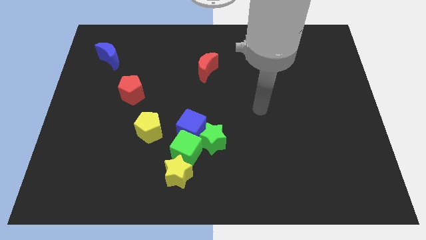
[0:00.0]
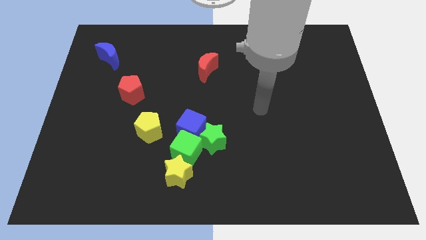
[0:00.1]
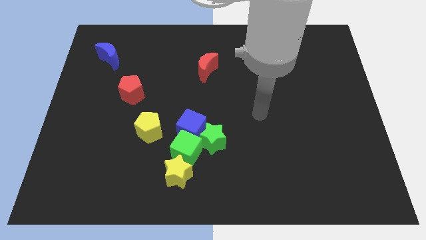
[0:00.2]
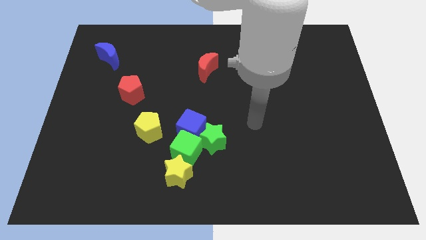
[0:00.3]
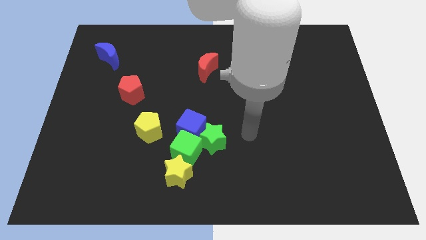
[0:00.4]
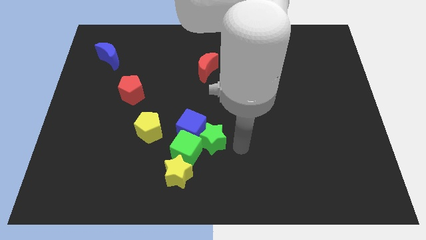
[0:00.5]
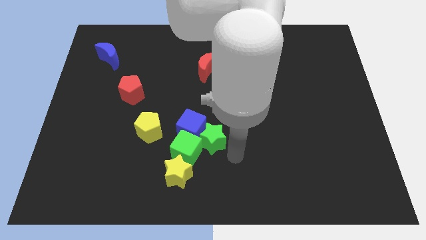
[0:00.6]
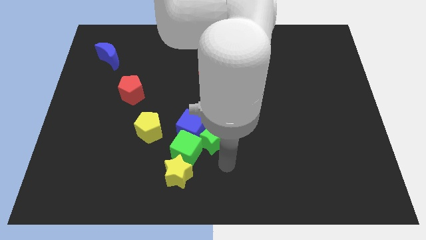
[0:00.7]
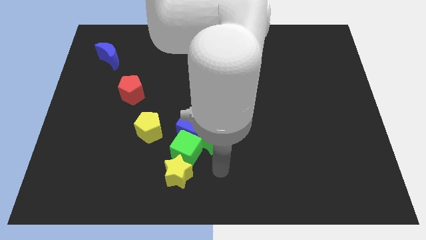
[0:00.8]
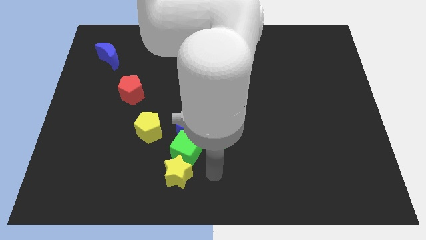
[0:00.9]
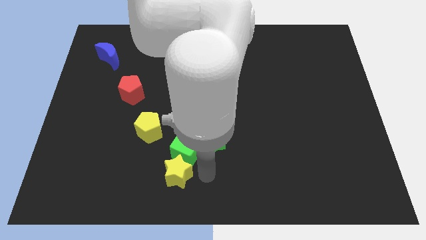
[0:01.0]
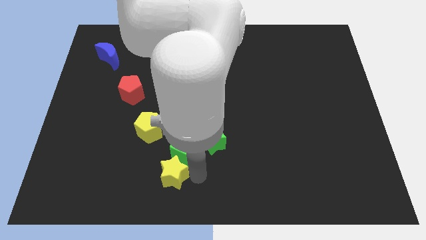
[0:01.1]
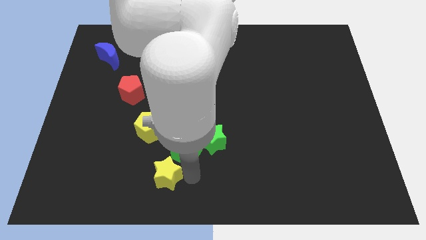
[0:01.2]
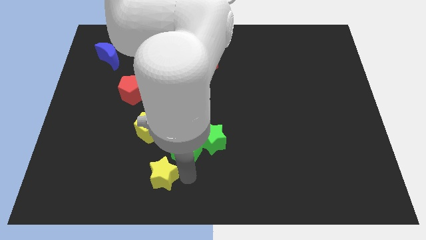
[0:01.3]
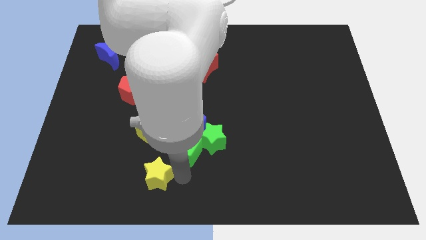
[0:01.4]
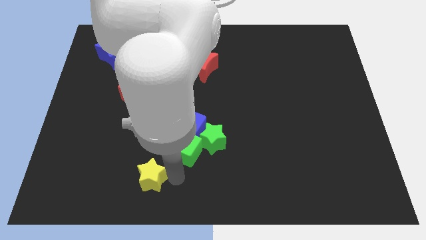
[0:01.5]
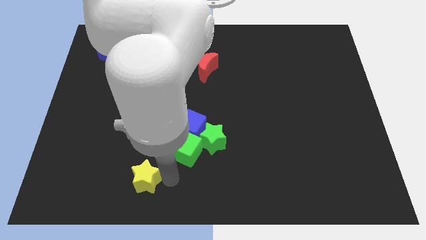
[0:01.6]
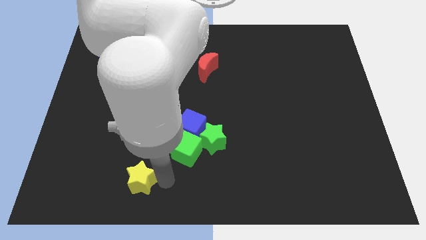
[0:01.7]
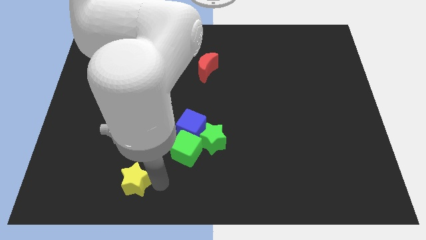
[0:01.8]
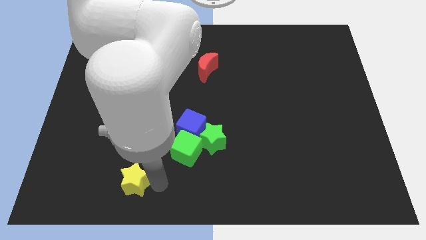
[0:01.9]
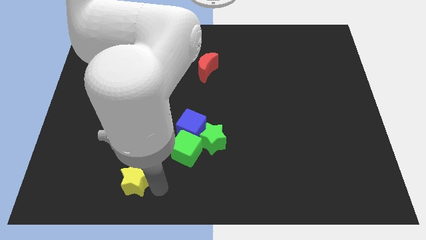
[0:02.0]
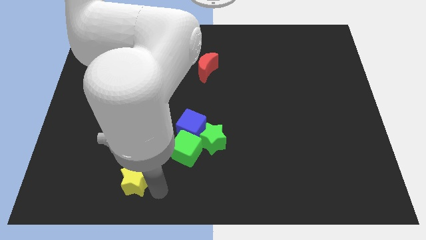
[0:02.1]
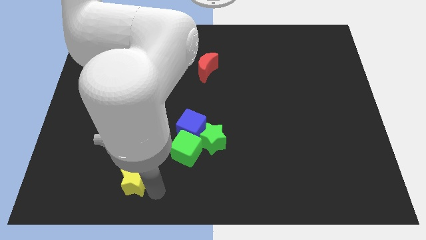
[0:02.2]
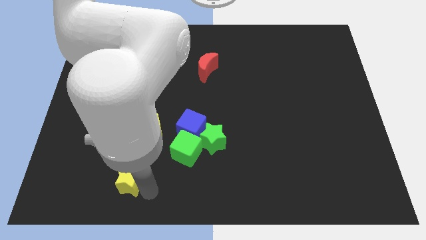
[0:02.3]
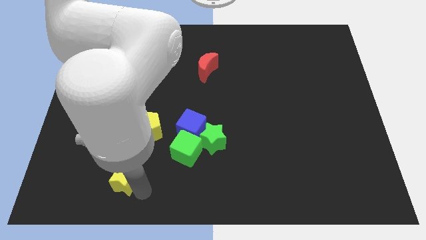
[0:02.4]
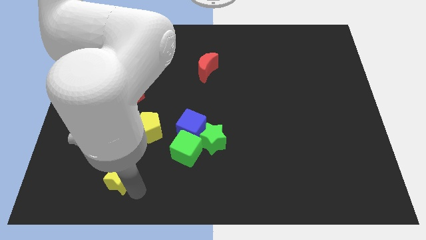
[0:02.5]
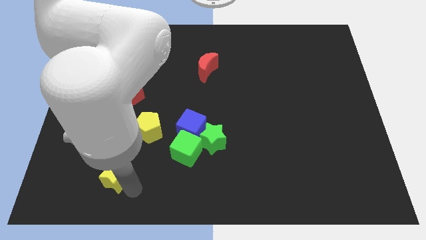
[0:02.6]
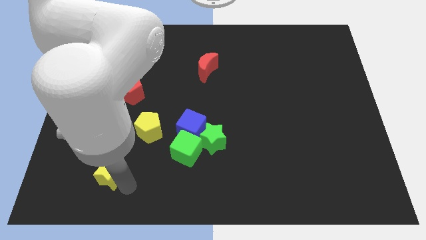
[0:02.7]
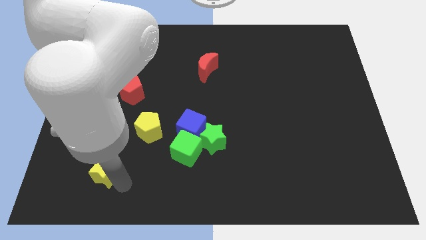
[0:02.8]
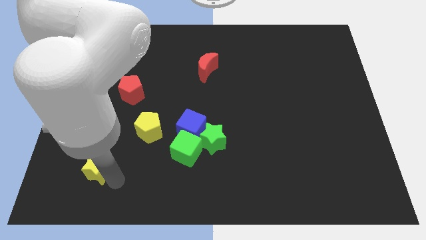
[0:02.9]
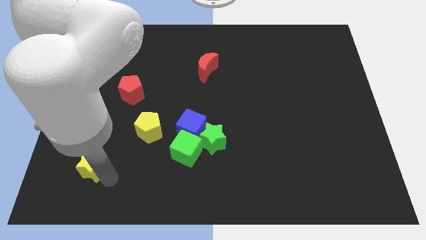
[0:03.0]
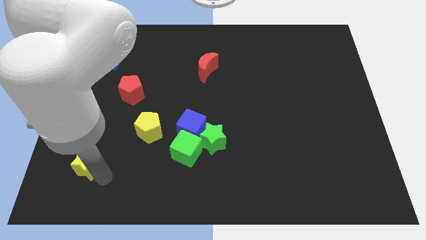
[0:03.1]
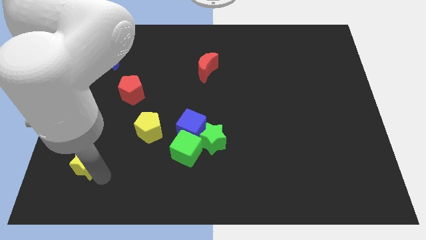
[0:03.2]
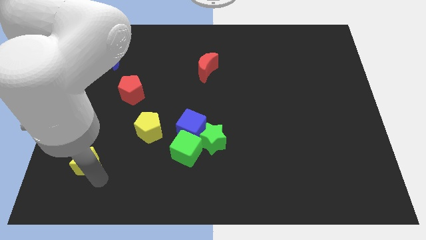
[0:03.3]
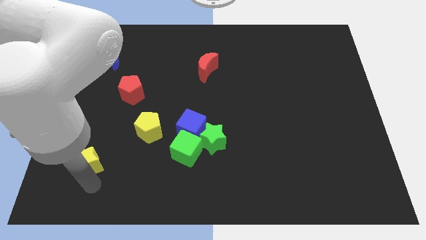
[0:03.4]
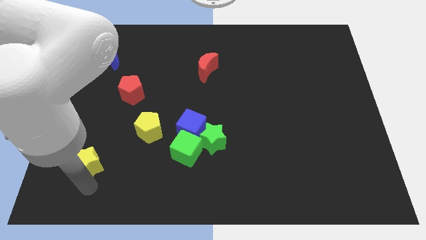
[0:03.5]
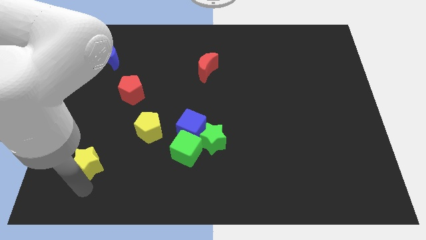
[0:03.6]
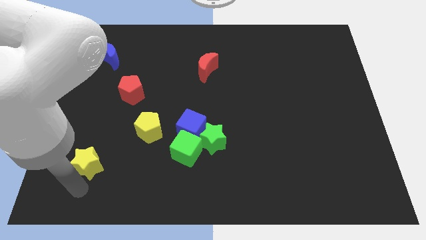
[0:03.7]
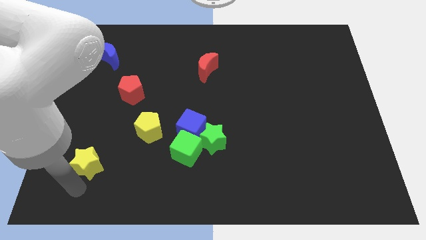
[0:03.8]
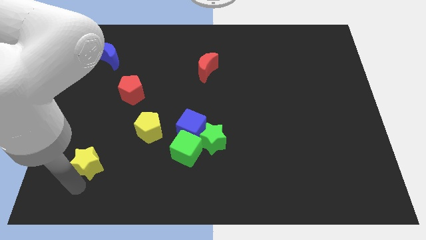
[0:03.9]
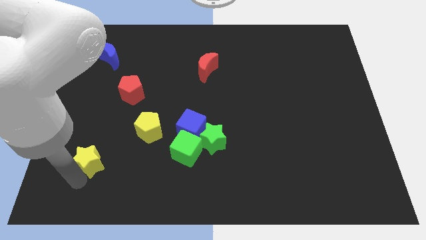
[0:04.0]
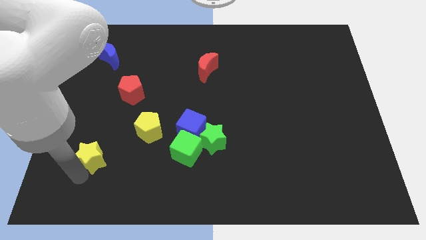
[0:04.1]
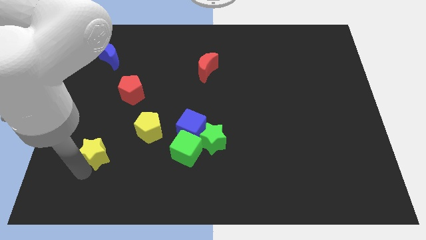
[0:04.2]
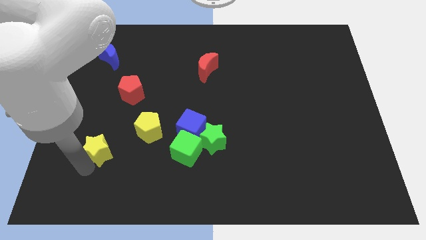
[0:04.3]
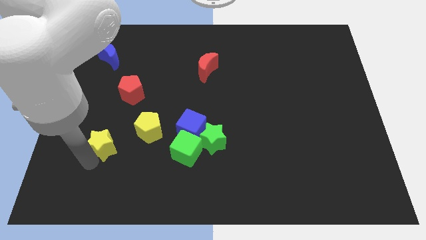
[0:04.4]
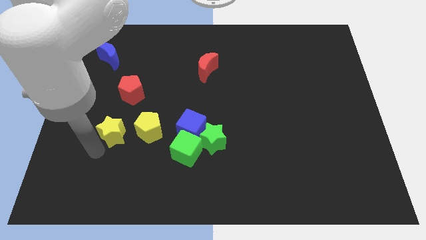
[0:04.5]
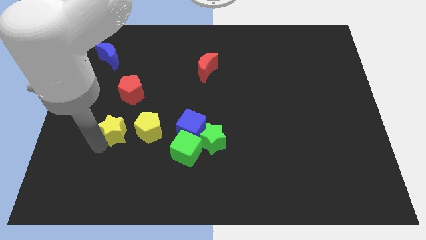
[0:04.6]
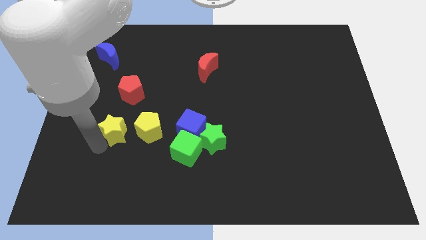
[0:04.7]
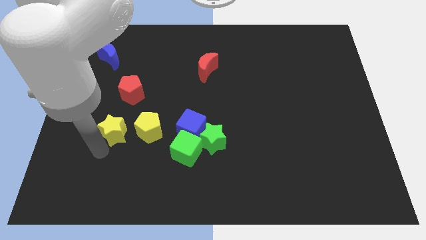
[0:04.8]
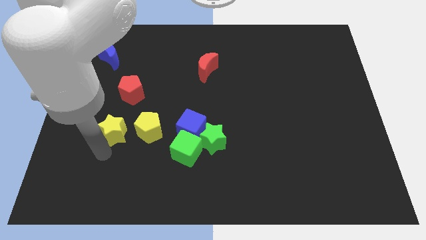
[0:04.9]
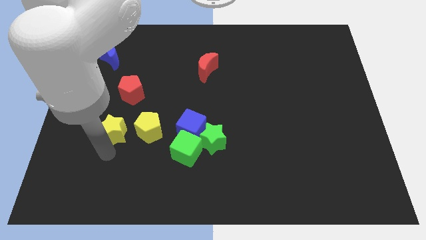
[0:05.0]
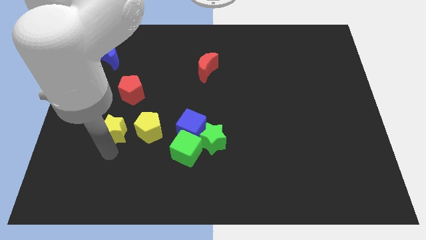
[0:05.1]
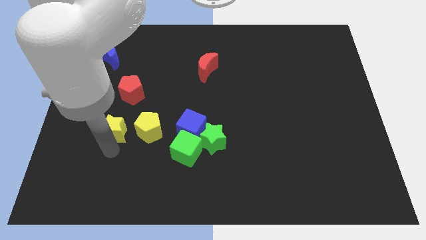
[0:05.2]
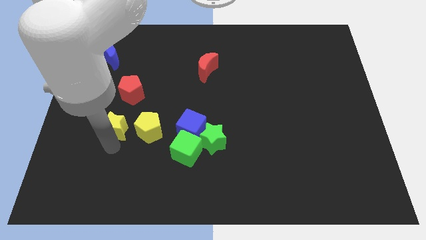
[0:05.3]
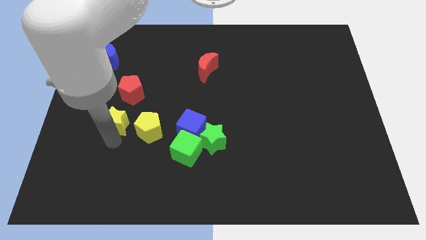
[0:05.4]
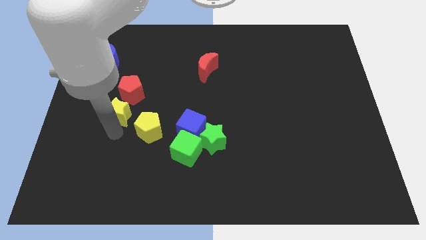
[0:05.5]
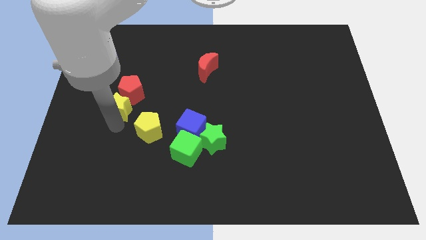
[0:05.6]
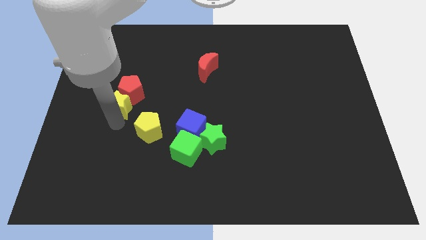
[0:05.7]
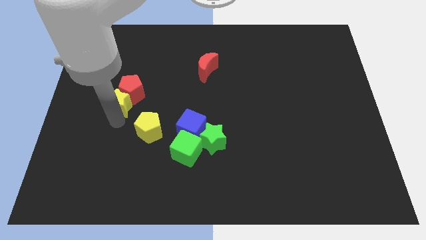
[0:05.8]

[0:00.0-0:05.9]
push the yellow star next to the red pentagon

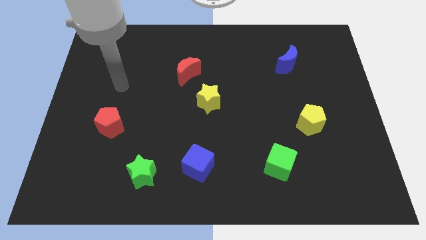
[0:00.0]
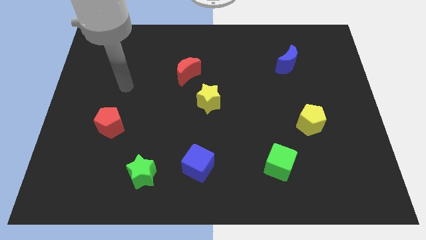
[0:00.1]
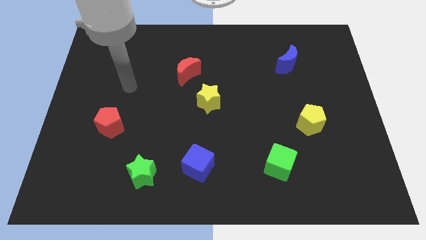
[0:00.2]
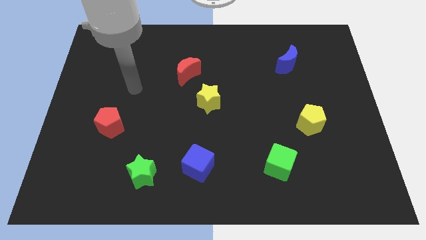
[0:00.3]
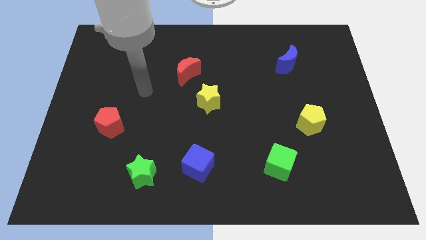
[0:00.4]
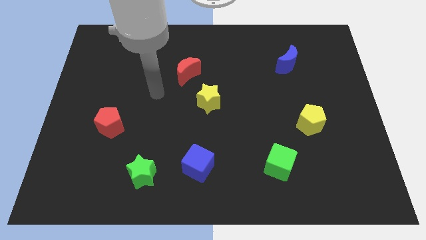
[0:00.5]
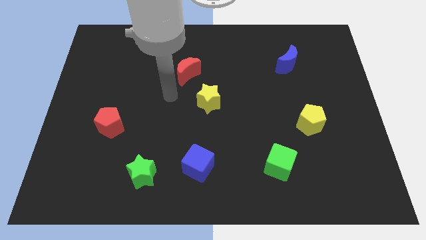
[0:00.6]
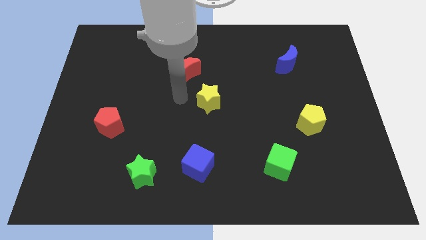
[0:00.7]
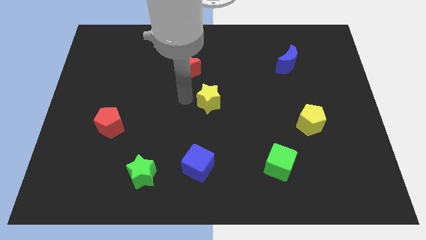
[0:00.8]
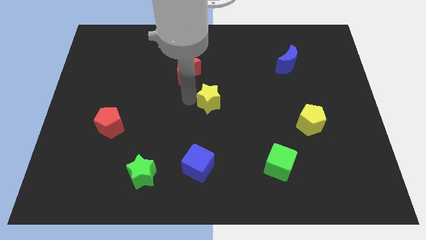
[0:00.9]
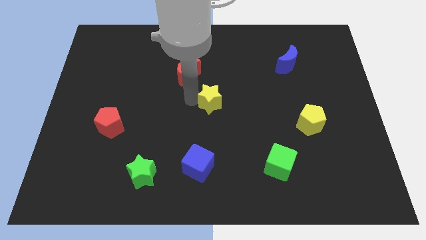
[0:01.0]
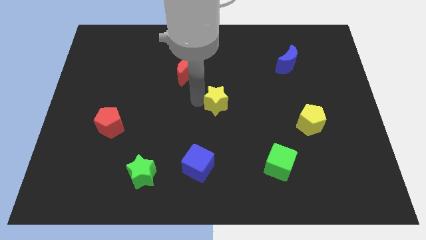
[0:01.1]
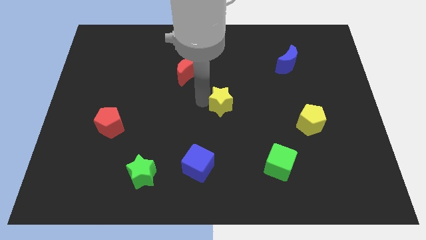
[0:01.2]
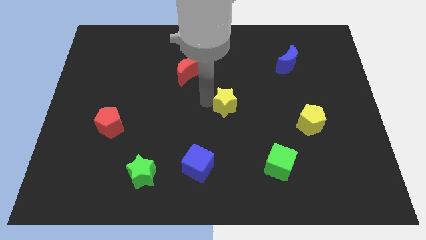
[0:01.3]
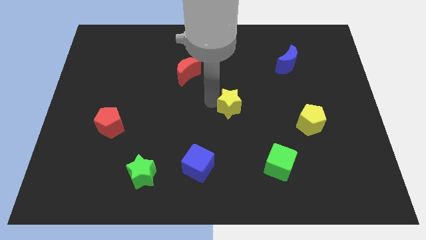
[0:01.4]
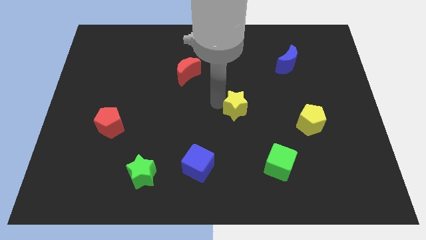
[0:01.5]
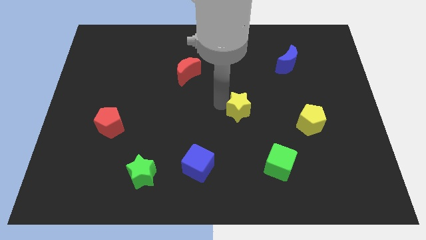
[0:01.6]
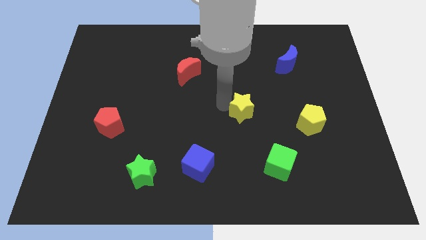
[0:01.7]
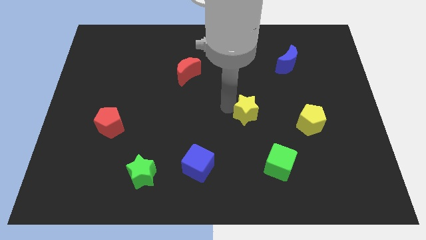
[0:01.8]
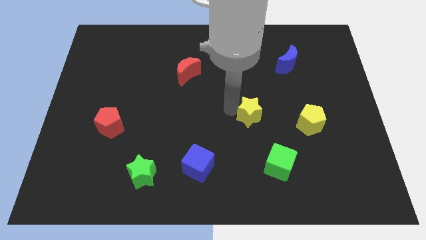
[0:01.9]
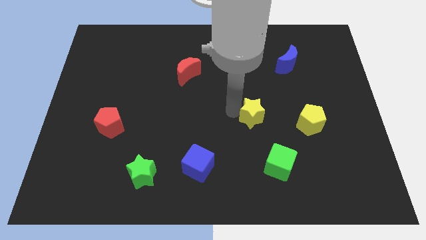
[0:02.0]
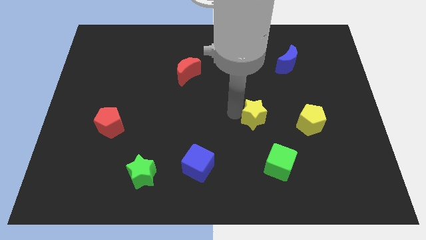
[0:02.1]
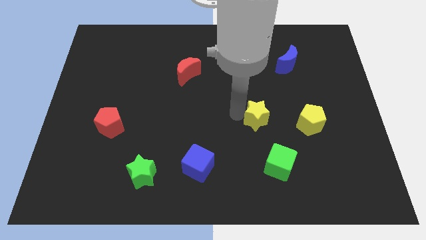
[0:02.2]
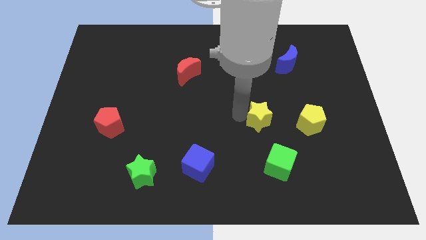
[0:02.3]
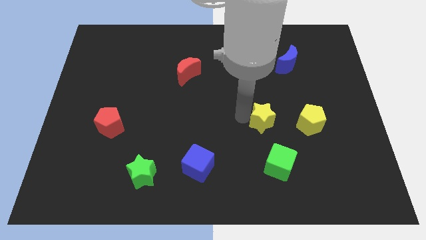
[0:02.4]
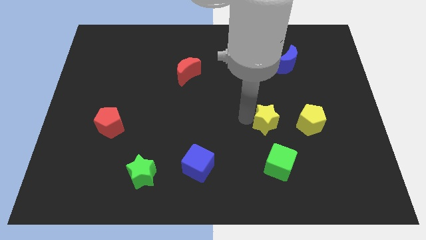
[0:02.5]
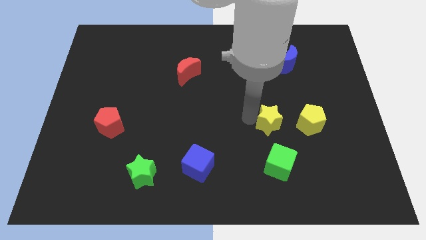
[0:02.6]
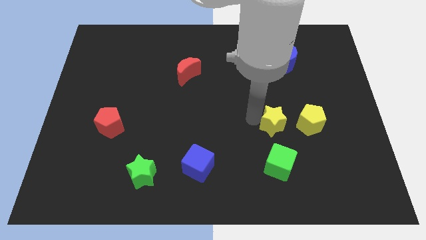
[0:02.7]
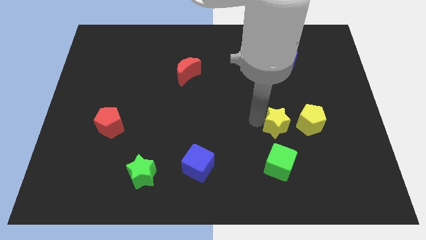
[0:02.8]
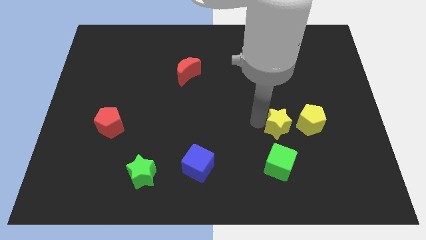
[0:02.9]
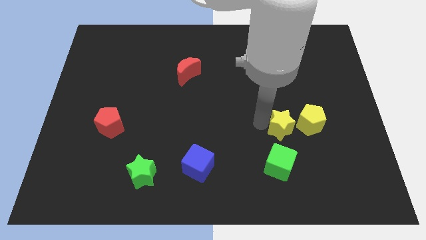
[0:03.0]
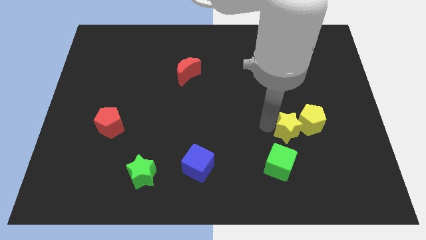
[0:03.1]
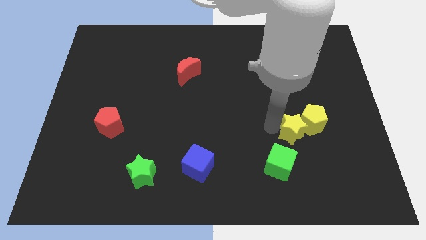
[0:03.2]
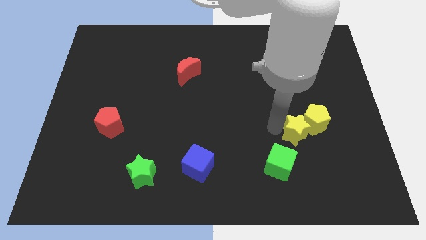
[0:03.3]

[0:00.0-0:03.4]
slide the yellow star close to the yellow pentagon
